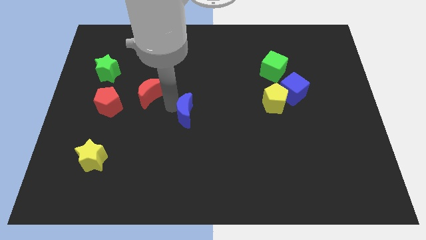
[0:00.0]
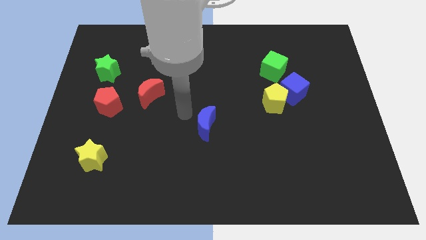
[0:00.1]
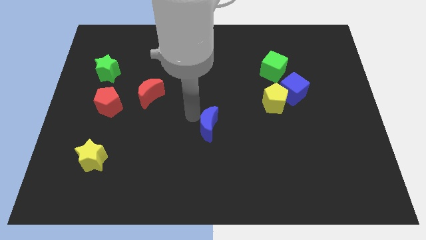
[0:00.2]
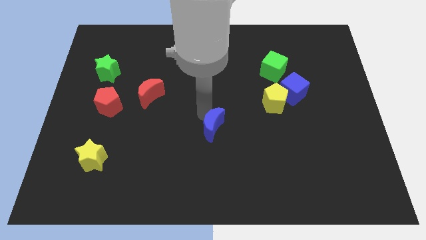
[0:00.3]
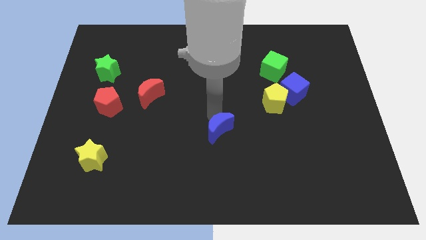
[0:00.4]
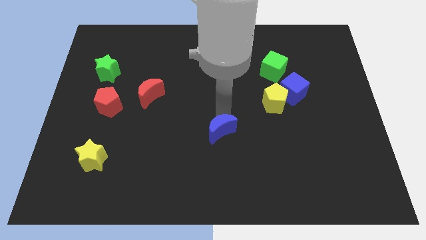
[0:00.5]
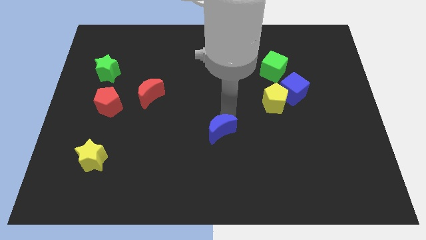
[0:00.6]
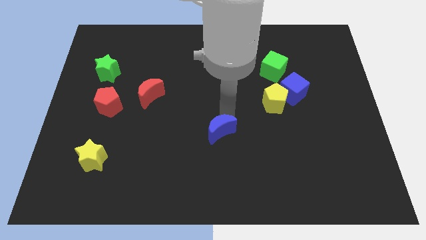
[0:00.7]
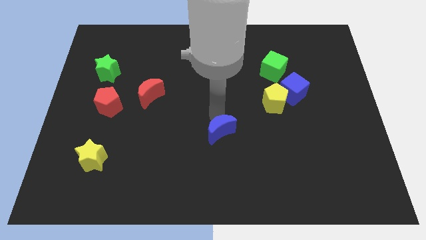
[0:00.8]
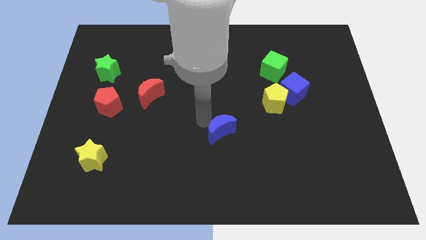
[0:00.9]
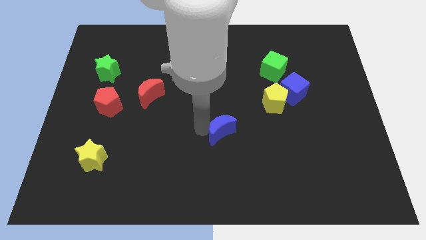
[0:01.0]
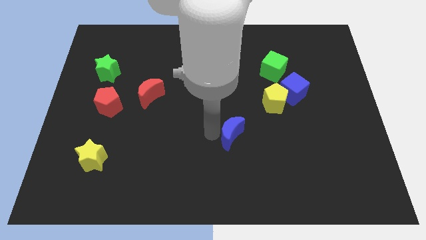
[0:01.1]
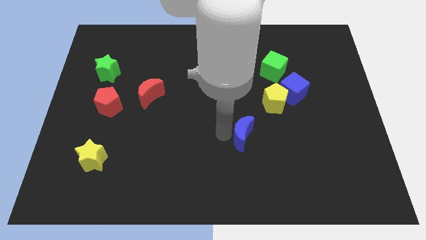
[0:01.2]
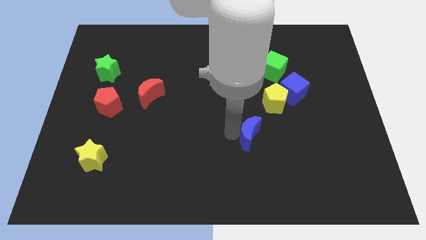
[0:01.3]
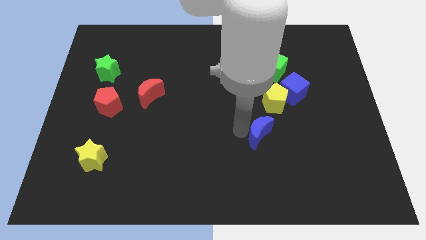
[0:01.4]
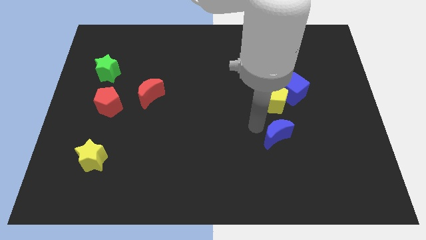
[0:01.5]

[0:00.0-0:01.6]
move the blue moon below the yellow pentagon

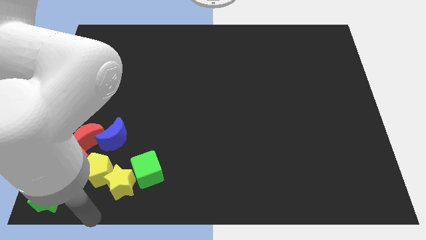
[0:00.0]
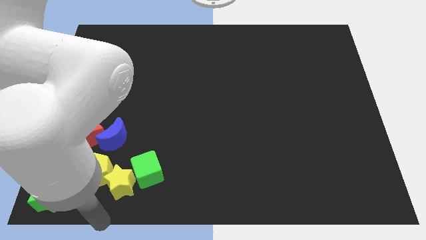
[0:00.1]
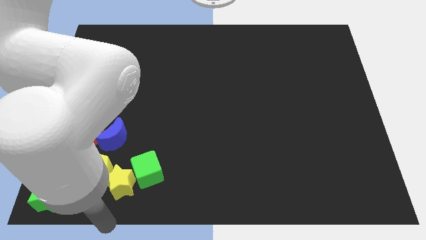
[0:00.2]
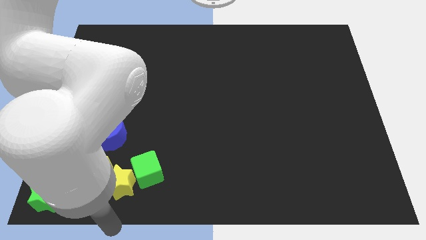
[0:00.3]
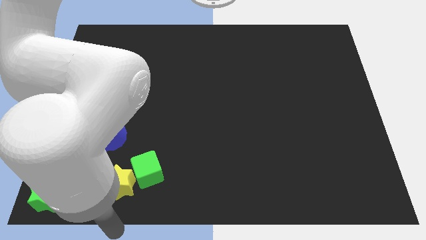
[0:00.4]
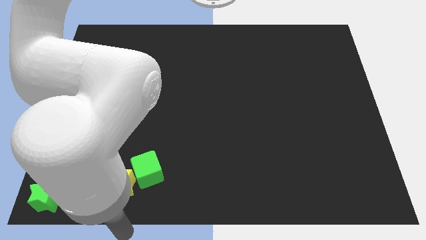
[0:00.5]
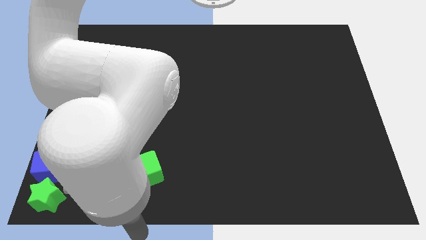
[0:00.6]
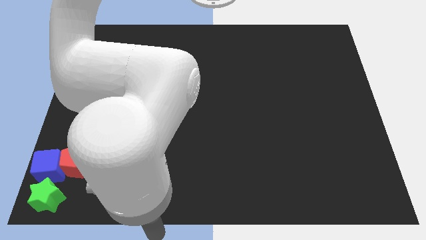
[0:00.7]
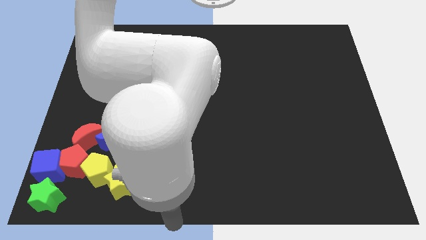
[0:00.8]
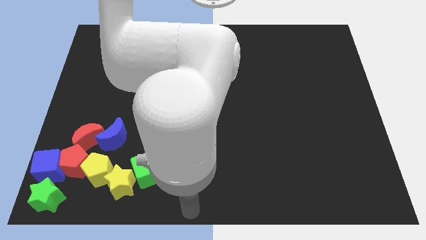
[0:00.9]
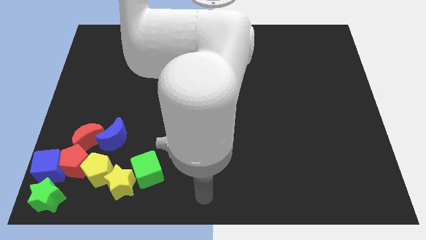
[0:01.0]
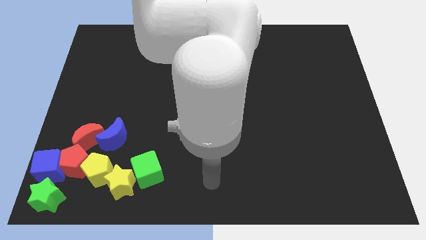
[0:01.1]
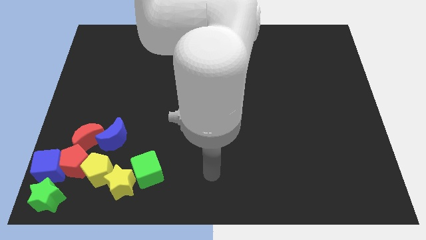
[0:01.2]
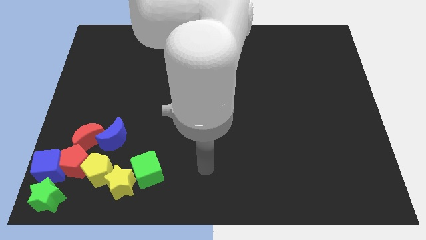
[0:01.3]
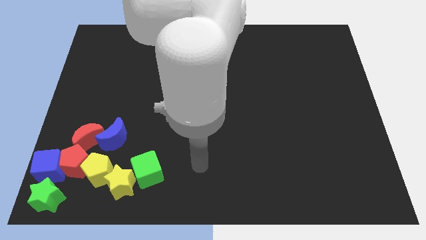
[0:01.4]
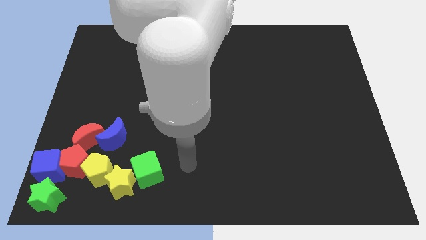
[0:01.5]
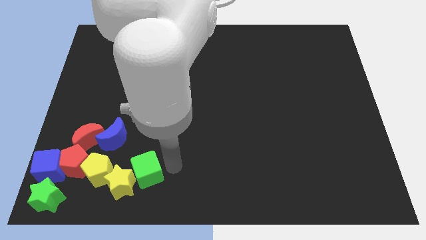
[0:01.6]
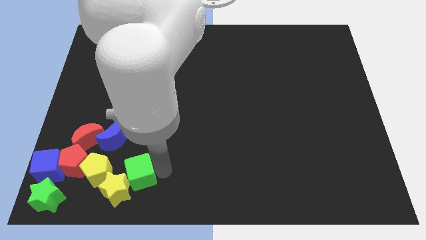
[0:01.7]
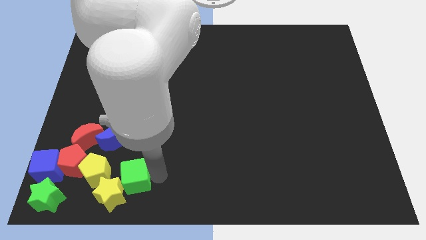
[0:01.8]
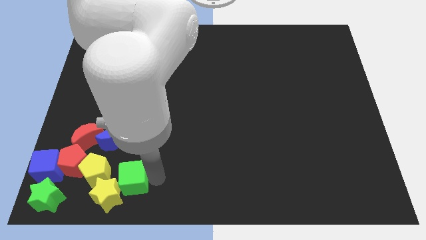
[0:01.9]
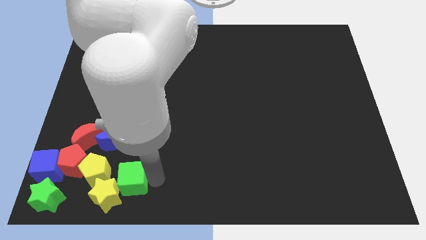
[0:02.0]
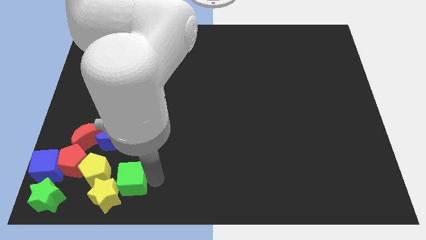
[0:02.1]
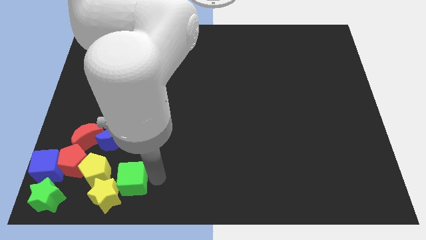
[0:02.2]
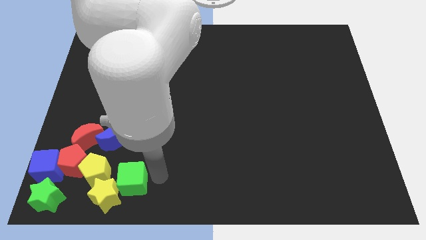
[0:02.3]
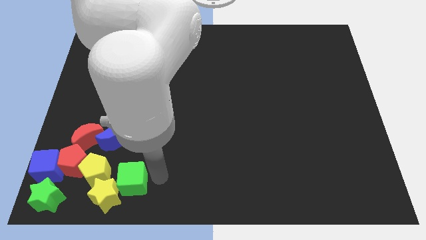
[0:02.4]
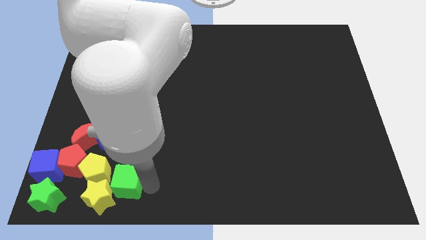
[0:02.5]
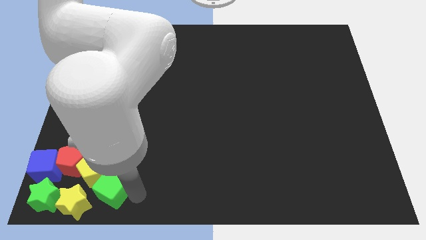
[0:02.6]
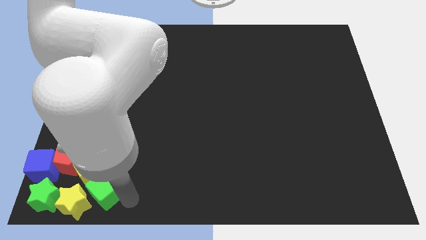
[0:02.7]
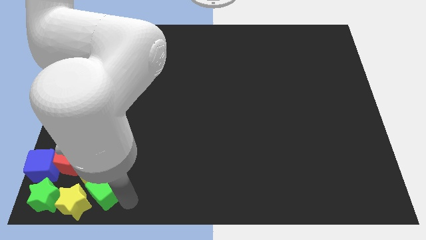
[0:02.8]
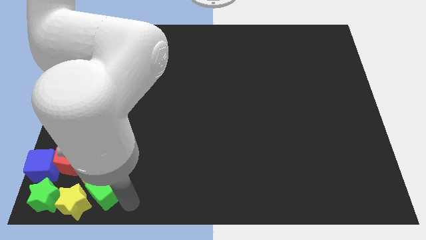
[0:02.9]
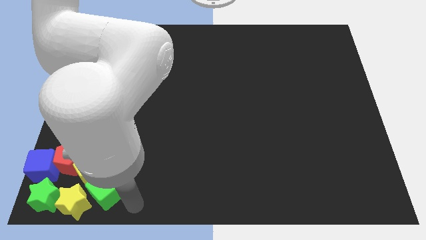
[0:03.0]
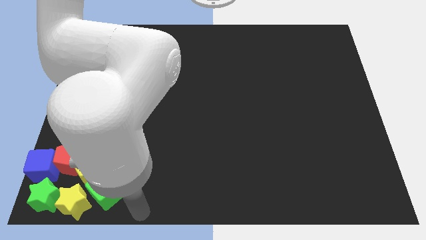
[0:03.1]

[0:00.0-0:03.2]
push green cube into yellow star

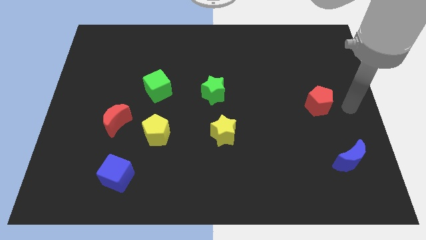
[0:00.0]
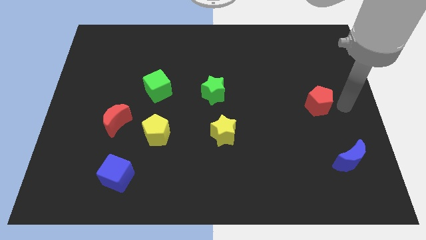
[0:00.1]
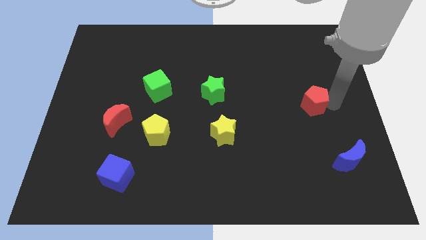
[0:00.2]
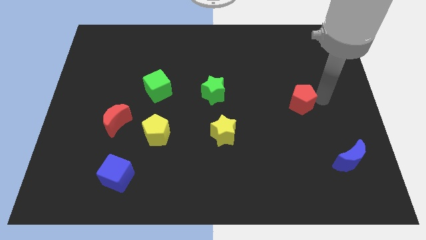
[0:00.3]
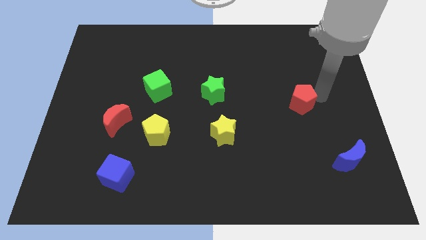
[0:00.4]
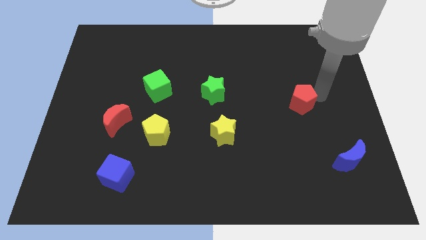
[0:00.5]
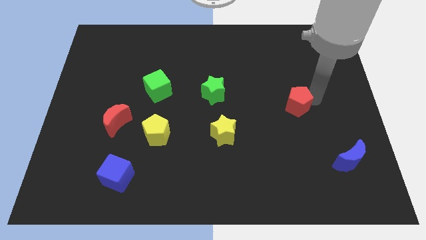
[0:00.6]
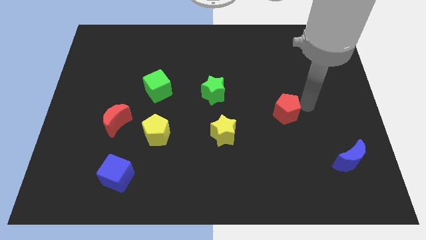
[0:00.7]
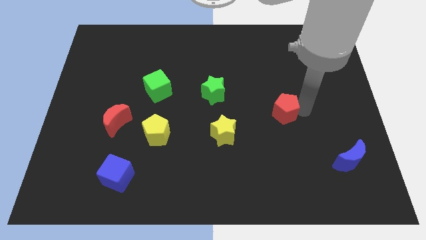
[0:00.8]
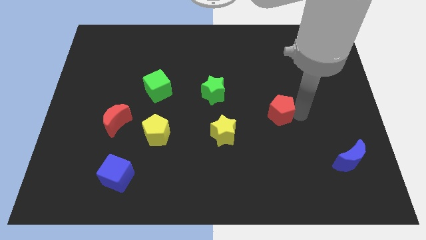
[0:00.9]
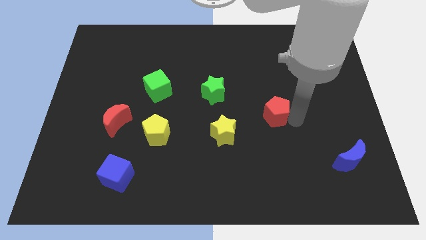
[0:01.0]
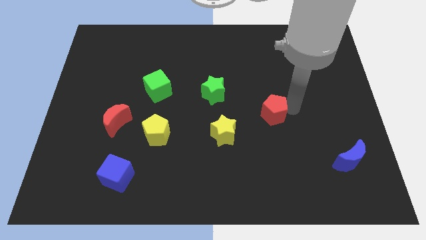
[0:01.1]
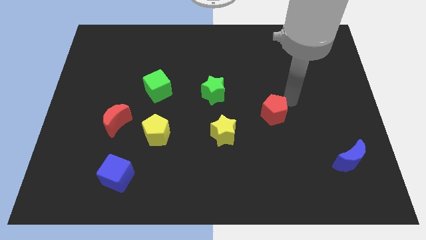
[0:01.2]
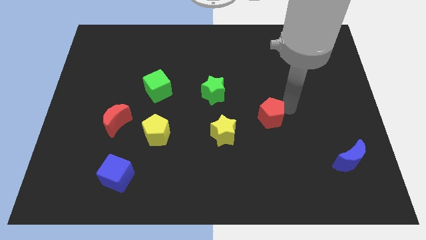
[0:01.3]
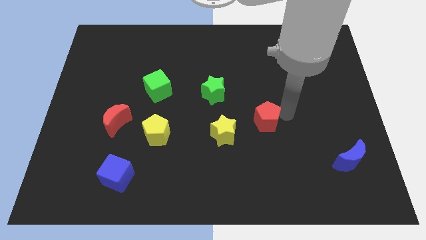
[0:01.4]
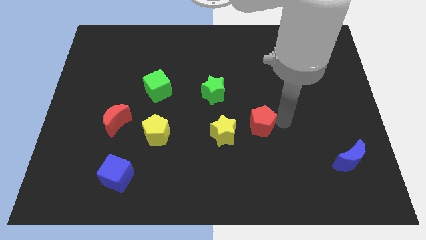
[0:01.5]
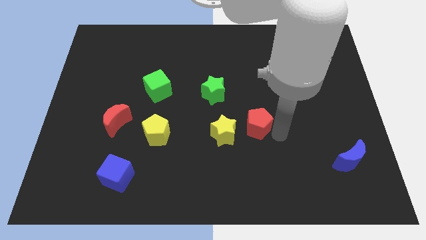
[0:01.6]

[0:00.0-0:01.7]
push the red pentagon parallel to the yellow star

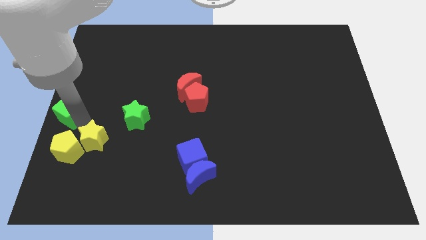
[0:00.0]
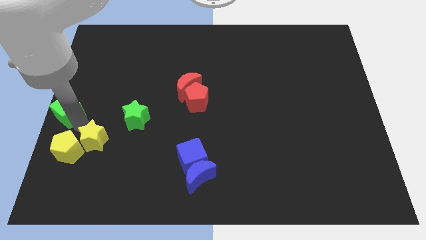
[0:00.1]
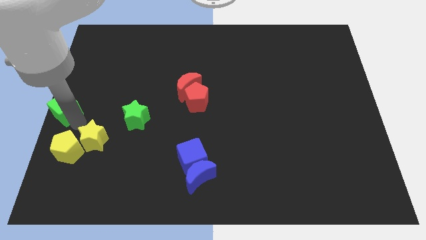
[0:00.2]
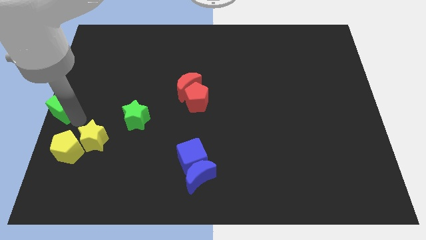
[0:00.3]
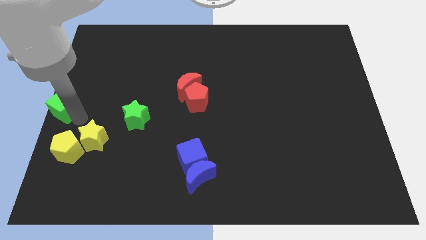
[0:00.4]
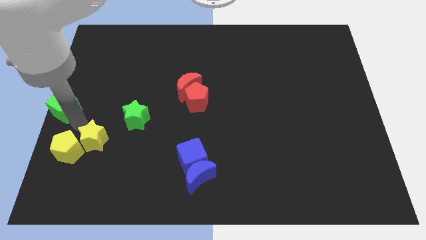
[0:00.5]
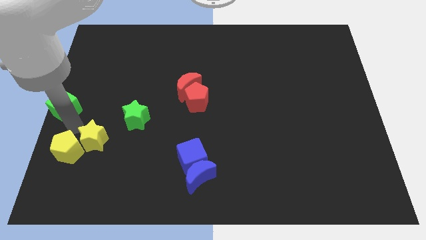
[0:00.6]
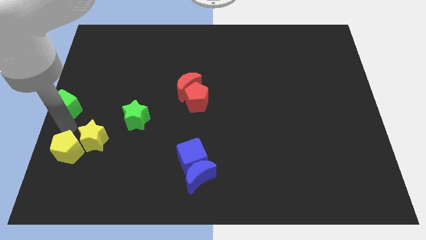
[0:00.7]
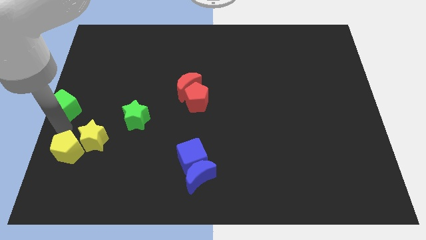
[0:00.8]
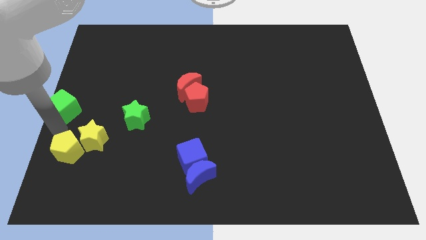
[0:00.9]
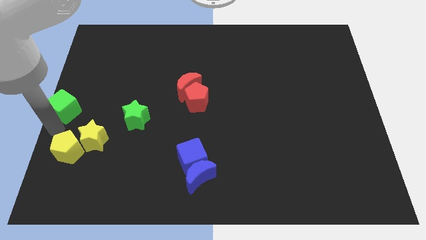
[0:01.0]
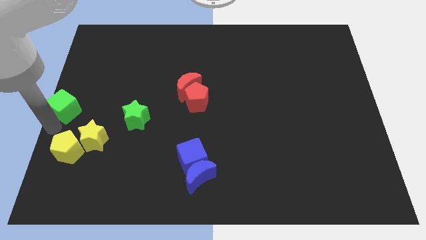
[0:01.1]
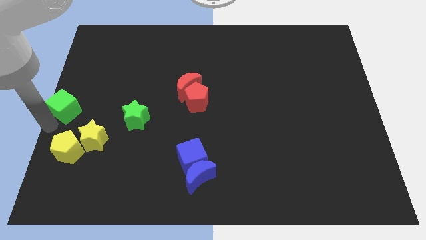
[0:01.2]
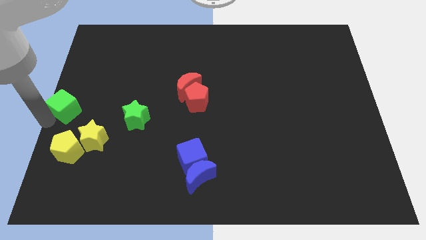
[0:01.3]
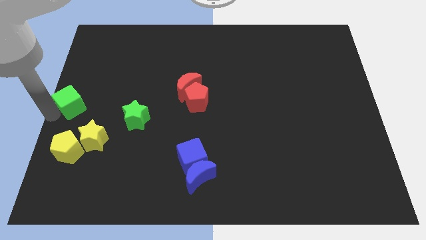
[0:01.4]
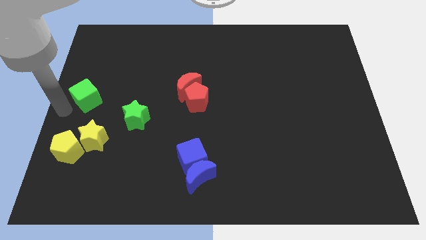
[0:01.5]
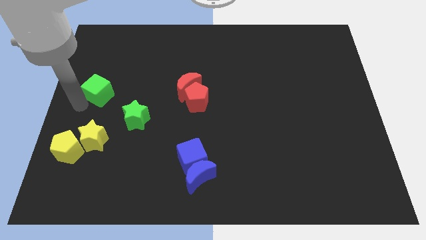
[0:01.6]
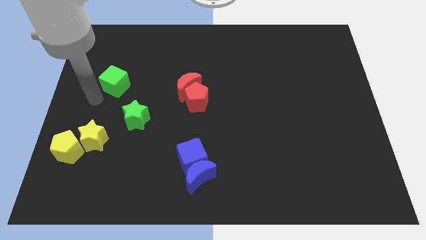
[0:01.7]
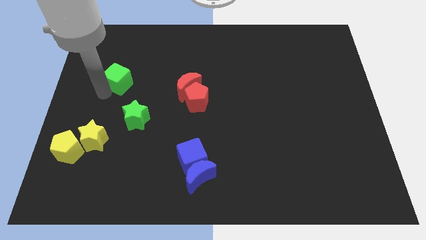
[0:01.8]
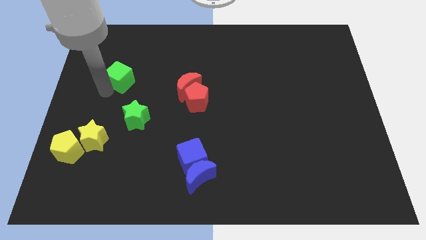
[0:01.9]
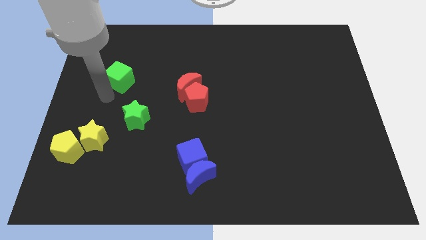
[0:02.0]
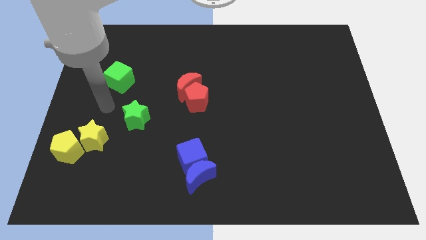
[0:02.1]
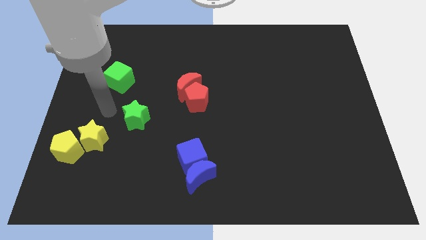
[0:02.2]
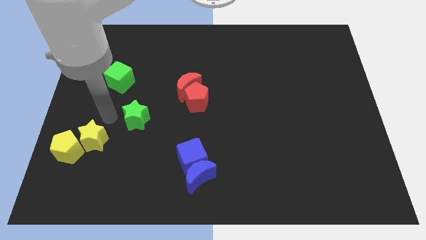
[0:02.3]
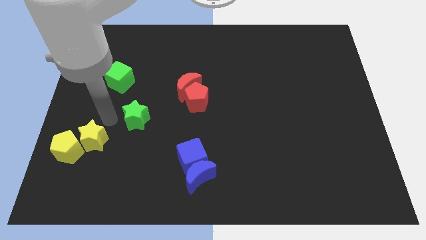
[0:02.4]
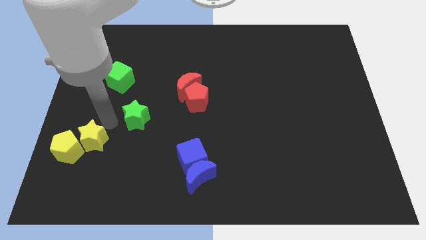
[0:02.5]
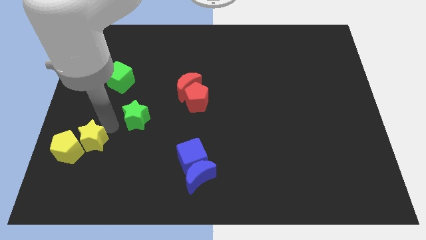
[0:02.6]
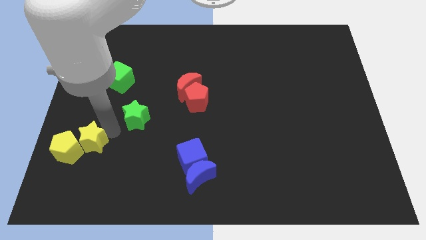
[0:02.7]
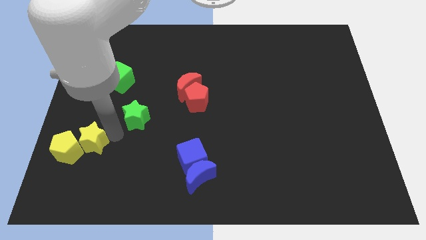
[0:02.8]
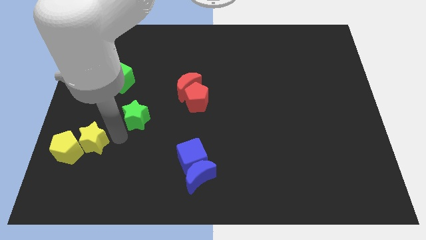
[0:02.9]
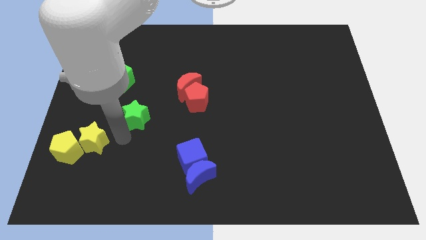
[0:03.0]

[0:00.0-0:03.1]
move the green cube diagonally top right to the yellow star
